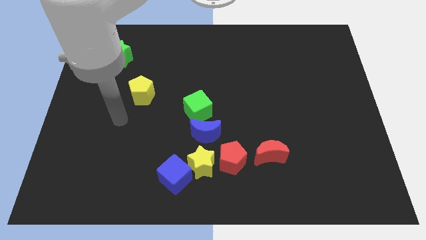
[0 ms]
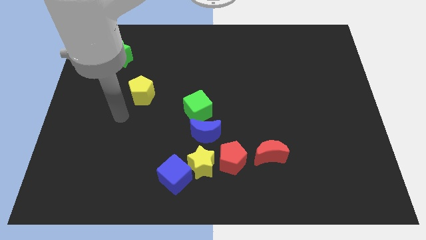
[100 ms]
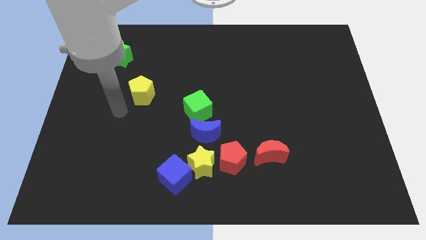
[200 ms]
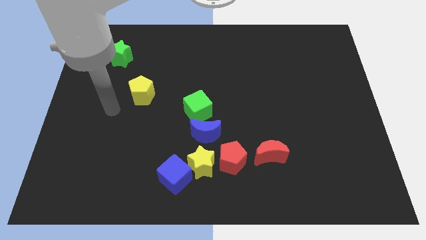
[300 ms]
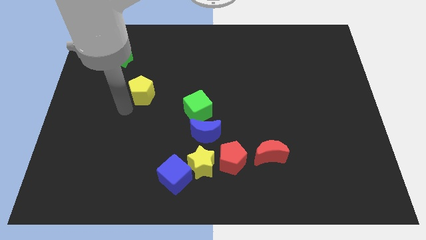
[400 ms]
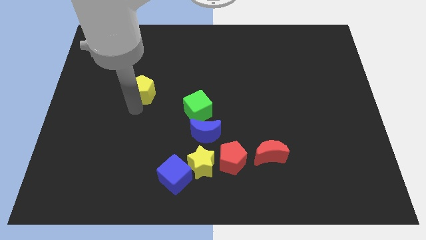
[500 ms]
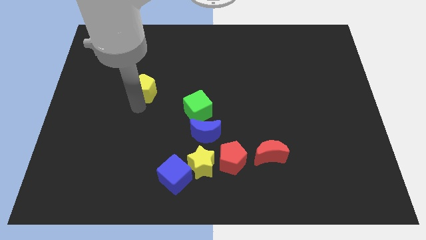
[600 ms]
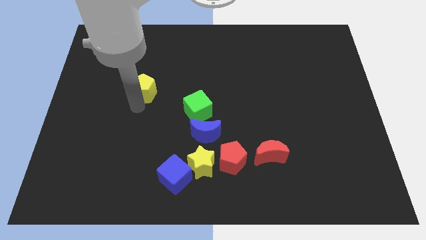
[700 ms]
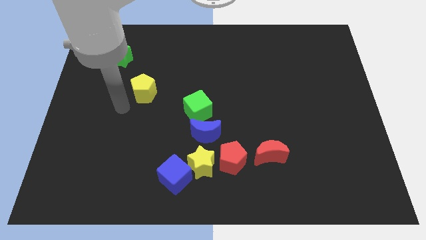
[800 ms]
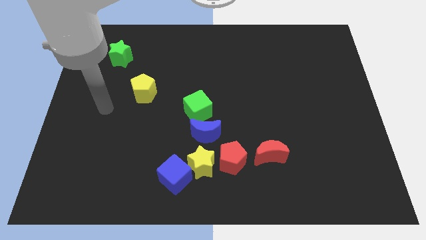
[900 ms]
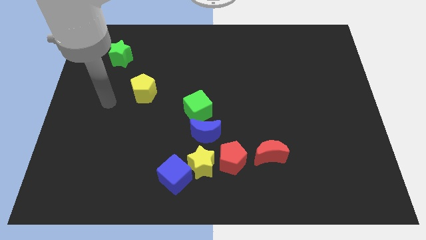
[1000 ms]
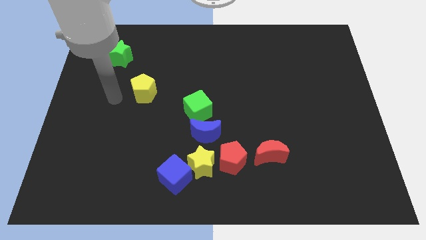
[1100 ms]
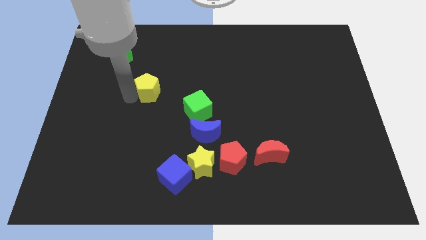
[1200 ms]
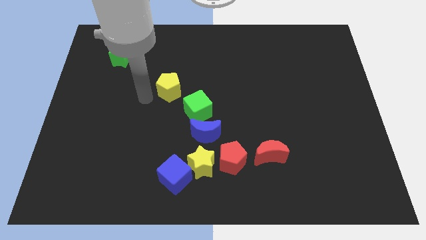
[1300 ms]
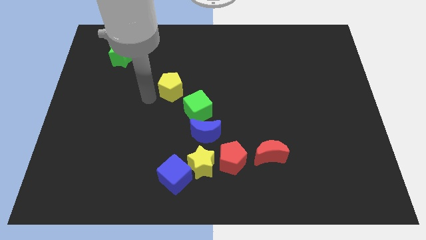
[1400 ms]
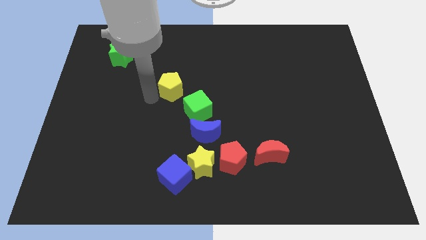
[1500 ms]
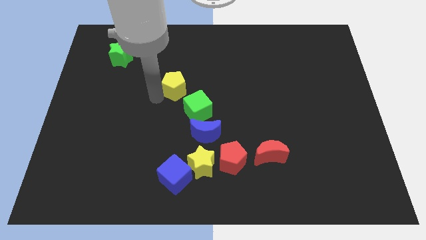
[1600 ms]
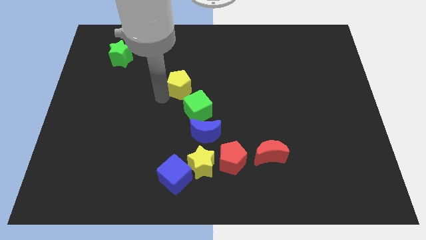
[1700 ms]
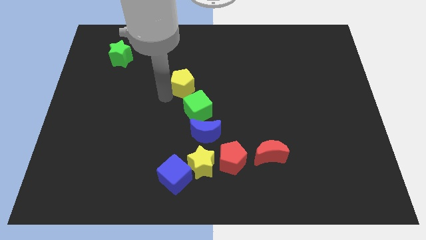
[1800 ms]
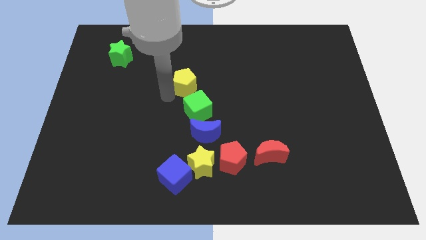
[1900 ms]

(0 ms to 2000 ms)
push the yellow pentagon diagonal above the green cube

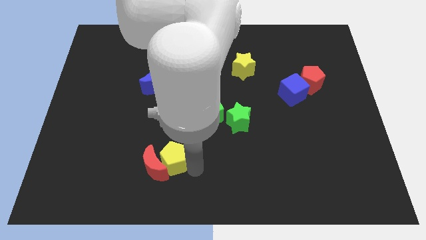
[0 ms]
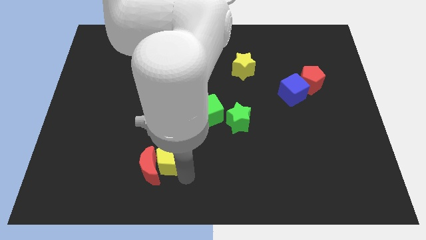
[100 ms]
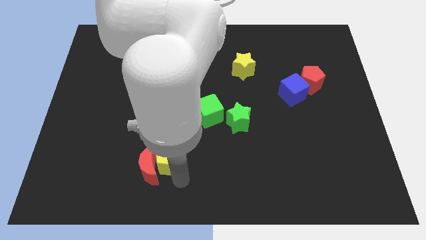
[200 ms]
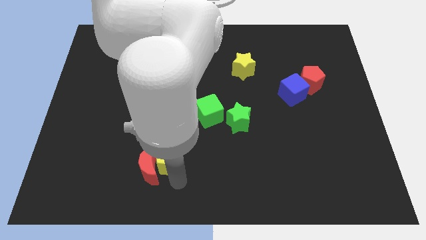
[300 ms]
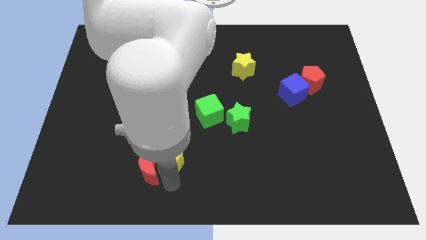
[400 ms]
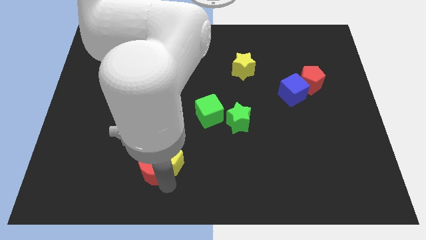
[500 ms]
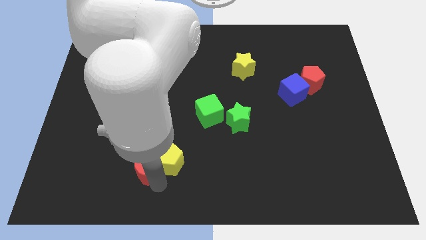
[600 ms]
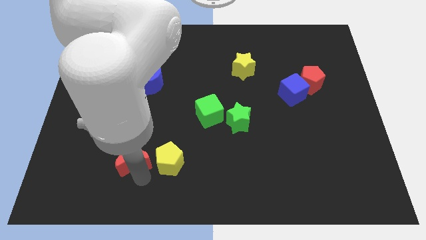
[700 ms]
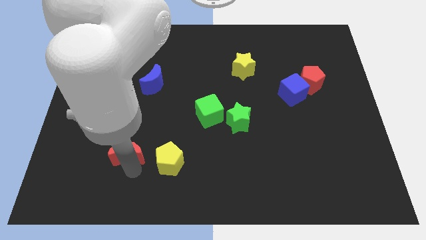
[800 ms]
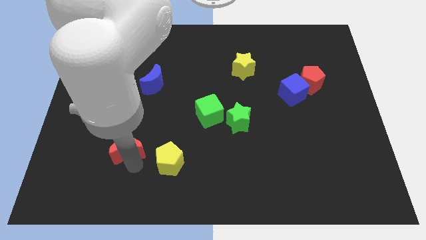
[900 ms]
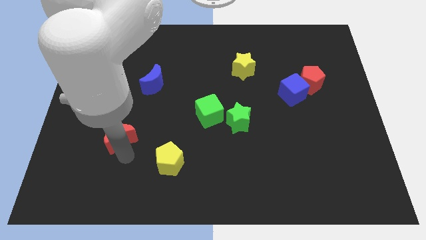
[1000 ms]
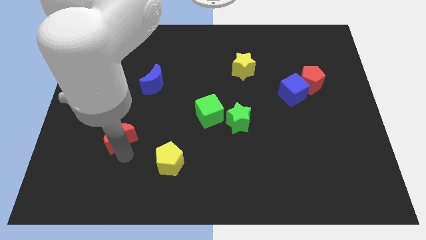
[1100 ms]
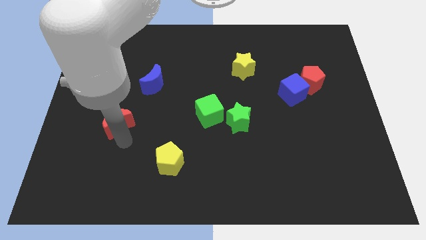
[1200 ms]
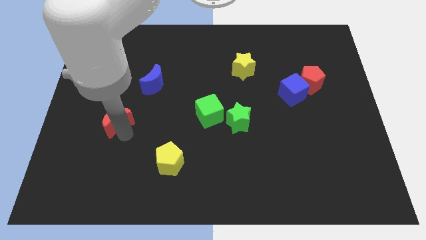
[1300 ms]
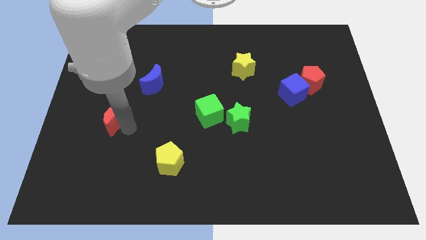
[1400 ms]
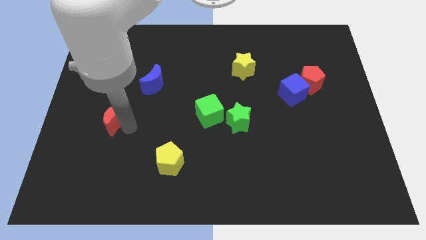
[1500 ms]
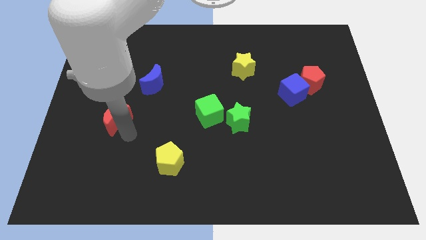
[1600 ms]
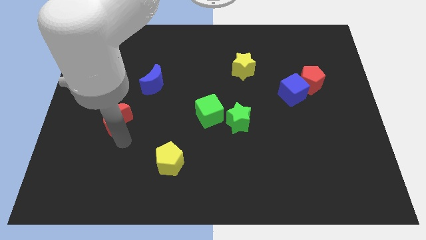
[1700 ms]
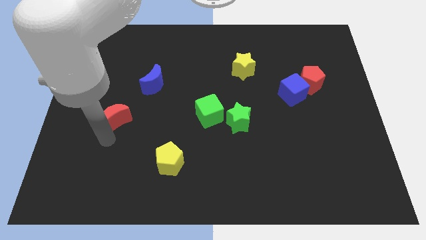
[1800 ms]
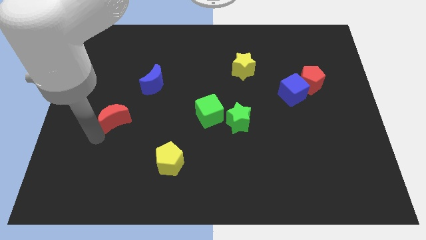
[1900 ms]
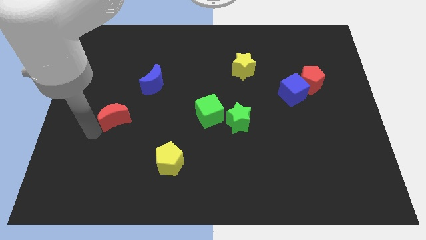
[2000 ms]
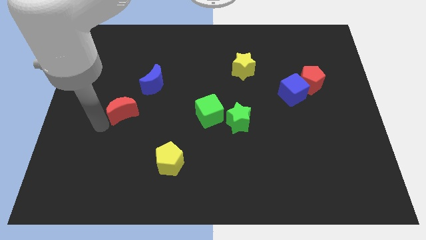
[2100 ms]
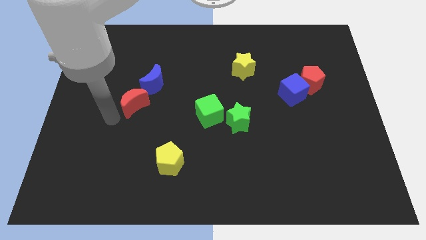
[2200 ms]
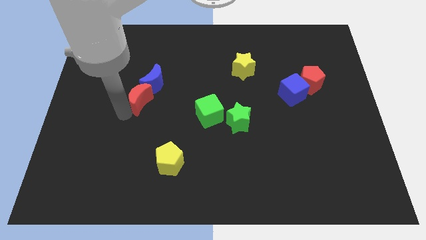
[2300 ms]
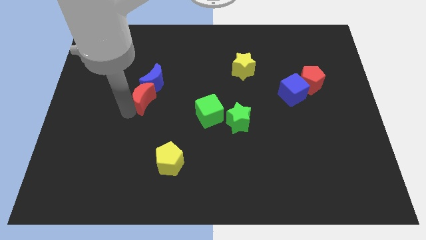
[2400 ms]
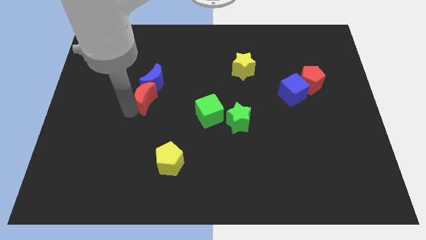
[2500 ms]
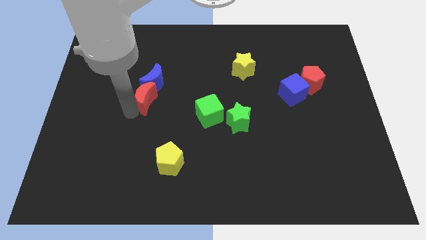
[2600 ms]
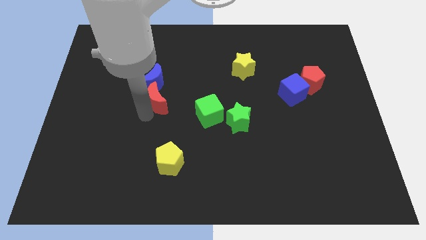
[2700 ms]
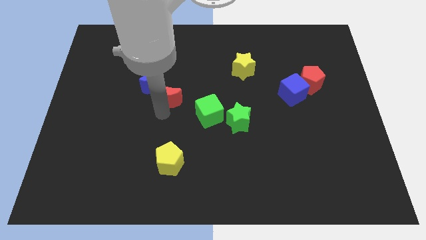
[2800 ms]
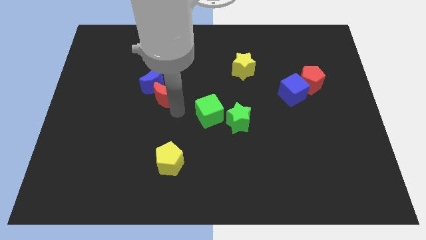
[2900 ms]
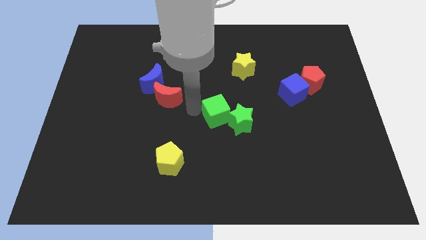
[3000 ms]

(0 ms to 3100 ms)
place red crescent below the blue crescent

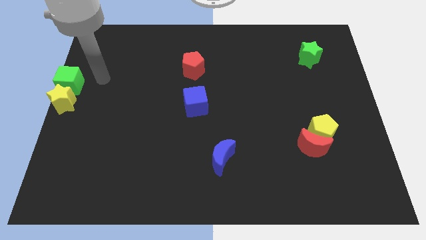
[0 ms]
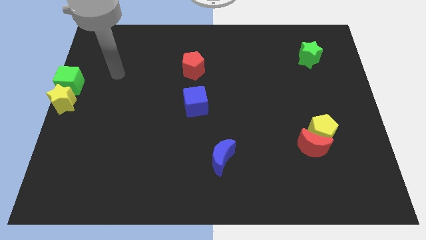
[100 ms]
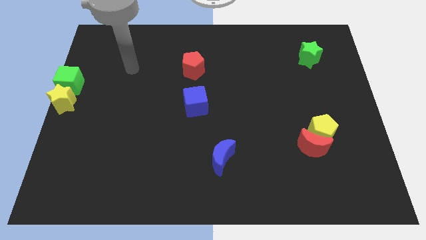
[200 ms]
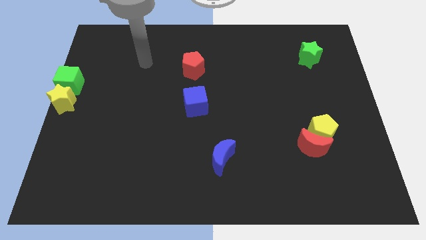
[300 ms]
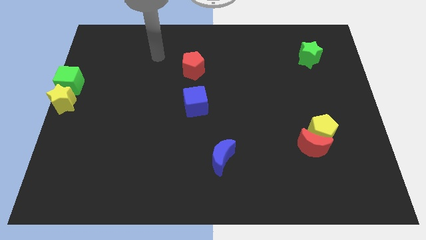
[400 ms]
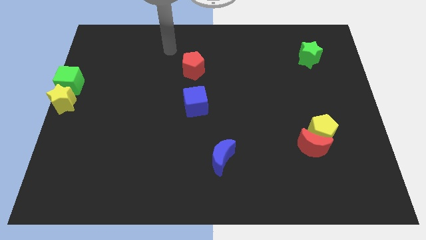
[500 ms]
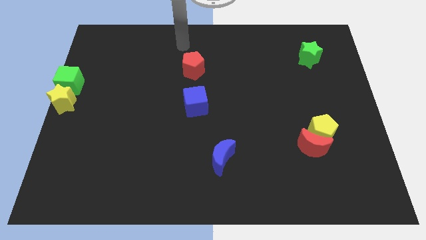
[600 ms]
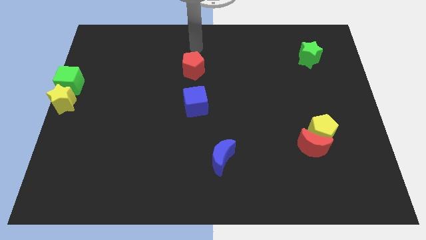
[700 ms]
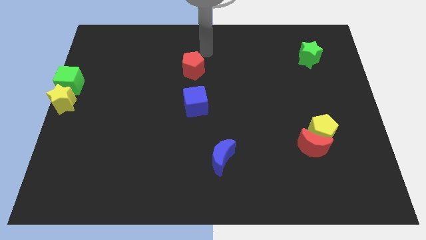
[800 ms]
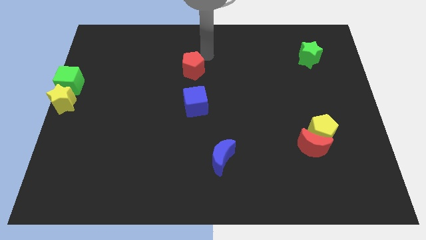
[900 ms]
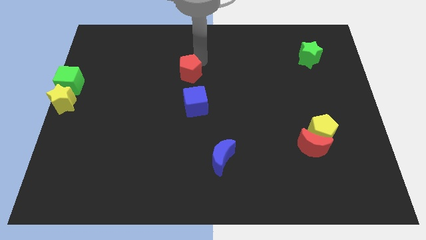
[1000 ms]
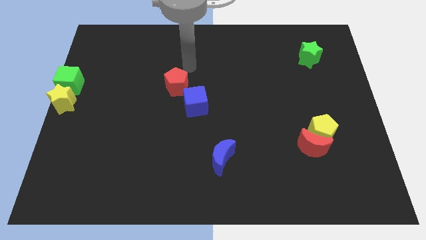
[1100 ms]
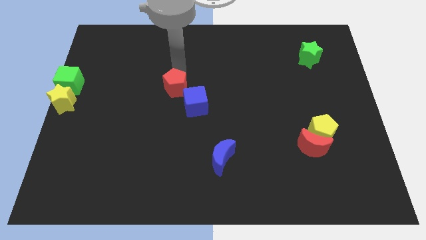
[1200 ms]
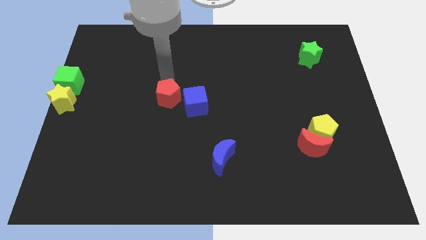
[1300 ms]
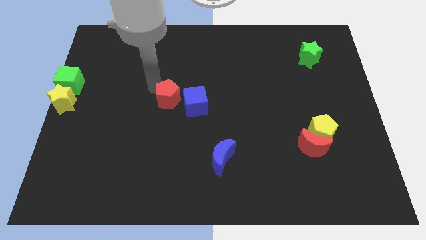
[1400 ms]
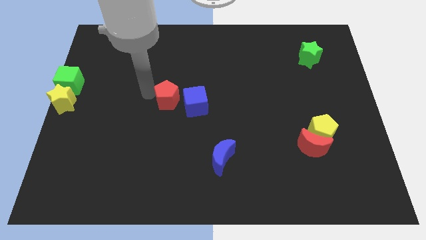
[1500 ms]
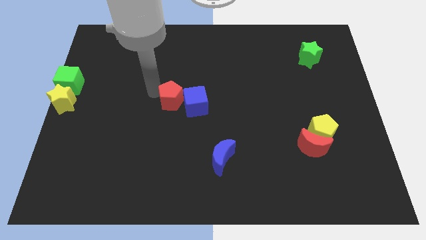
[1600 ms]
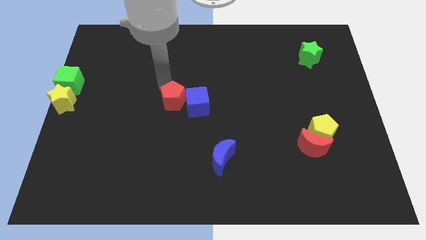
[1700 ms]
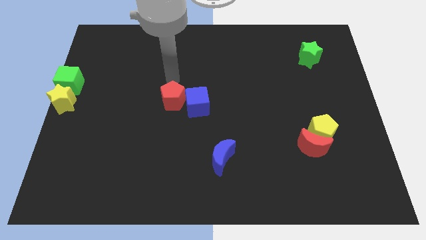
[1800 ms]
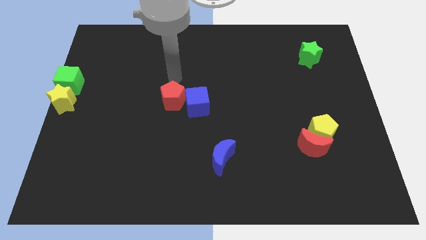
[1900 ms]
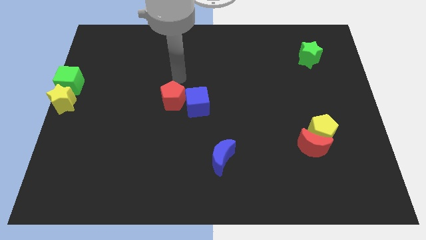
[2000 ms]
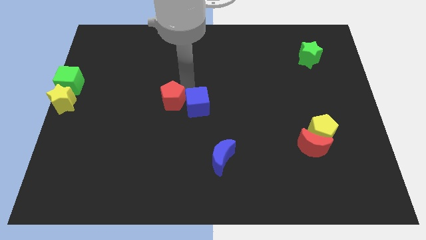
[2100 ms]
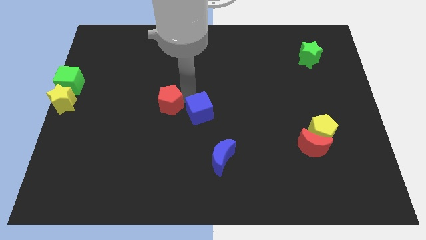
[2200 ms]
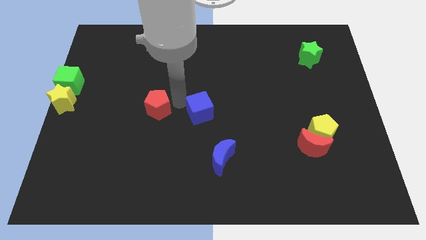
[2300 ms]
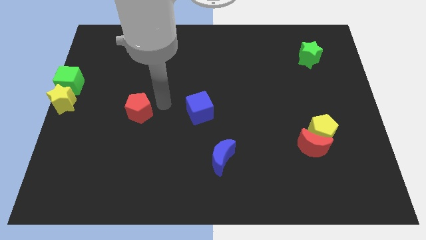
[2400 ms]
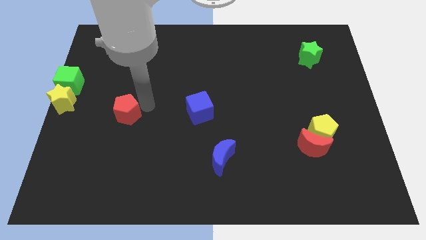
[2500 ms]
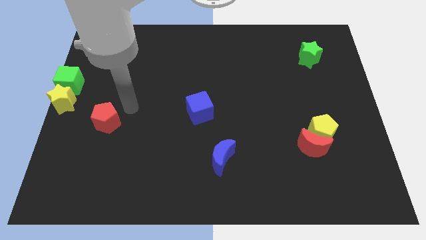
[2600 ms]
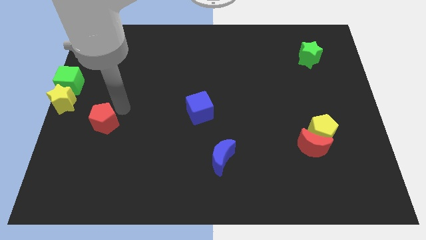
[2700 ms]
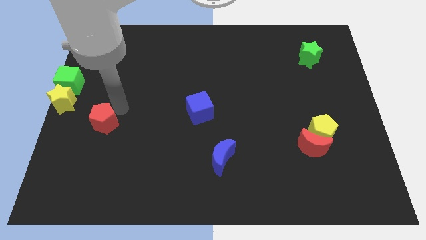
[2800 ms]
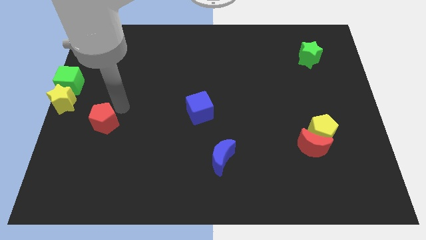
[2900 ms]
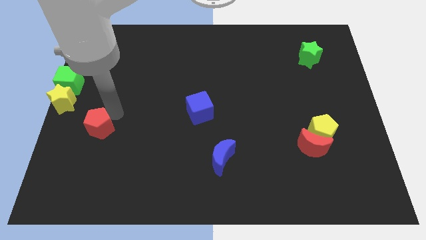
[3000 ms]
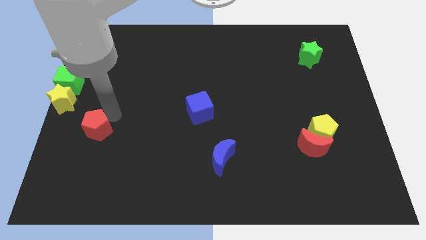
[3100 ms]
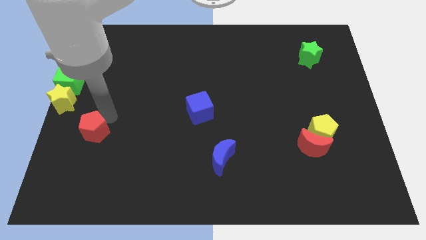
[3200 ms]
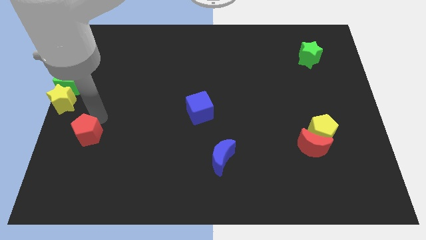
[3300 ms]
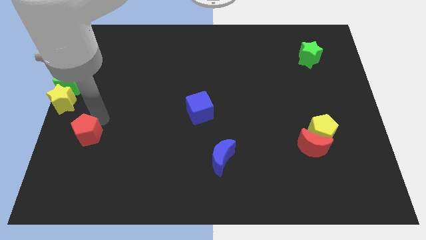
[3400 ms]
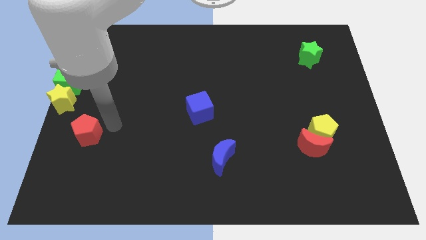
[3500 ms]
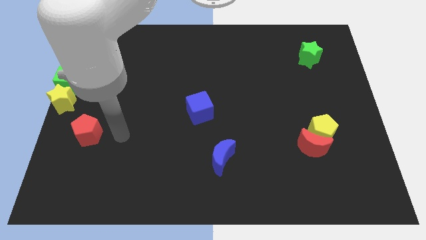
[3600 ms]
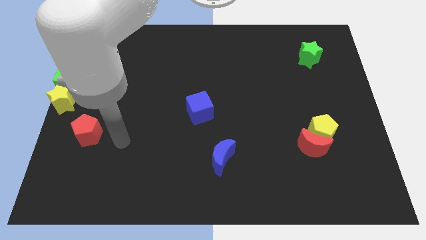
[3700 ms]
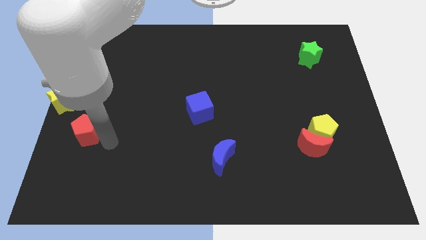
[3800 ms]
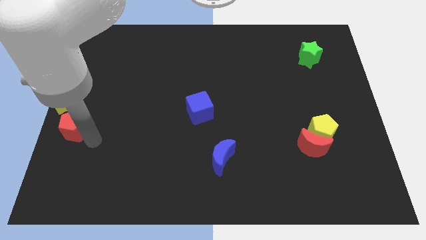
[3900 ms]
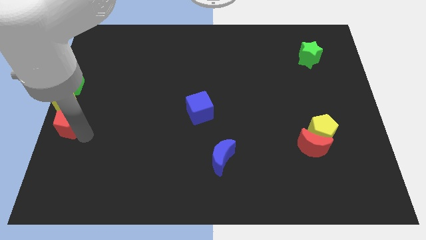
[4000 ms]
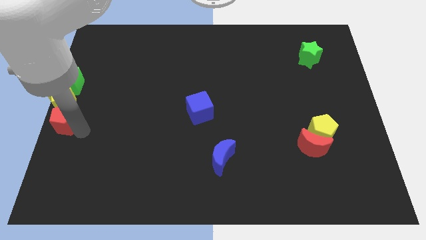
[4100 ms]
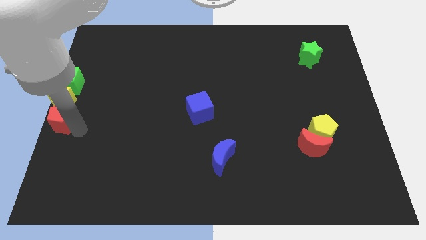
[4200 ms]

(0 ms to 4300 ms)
place the red pentagon below the yellow star
